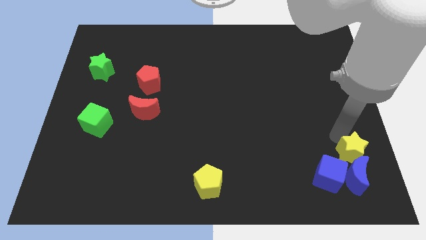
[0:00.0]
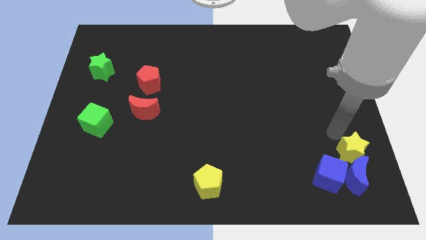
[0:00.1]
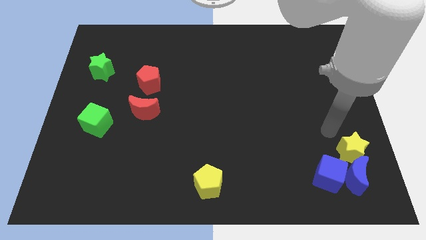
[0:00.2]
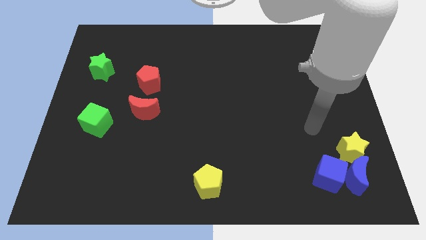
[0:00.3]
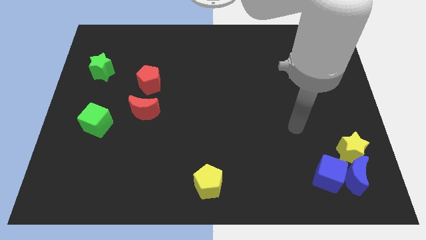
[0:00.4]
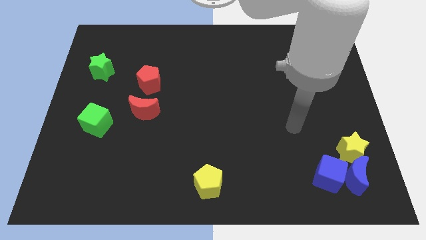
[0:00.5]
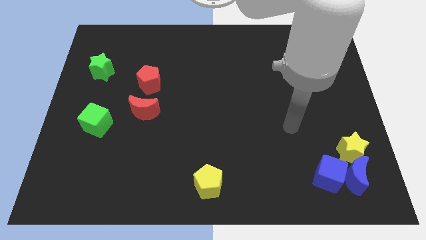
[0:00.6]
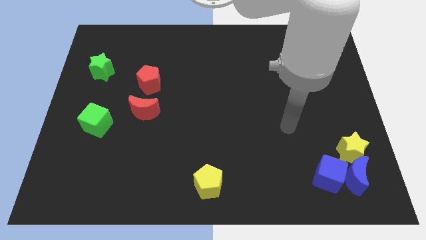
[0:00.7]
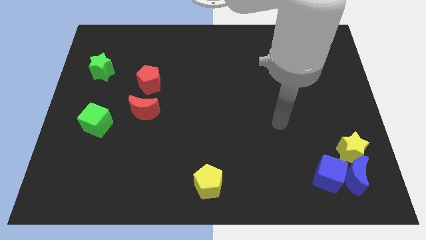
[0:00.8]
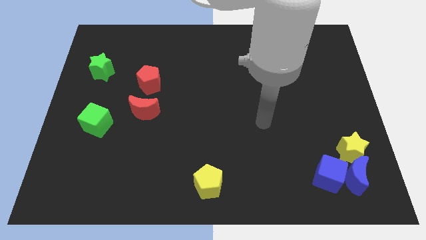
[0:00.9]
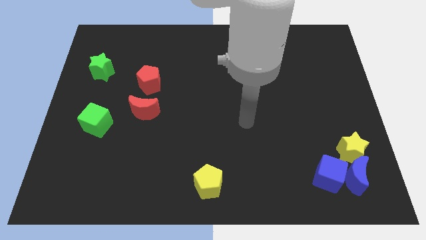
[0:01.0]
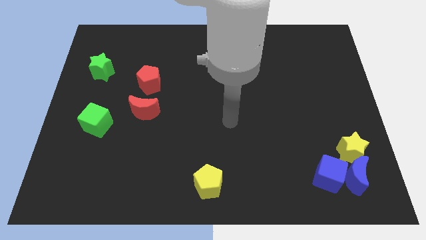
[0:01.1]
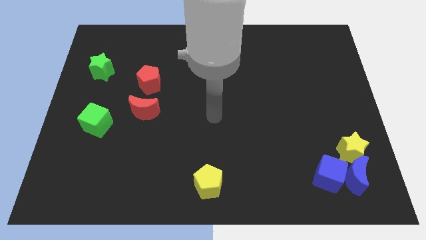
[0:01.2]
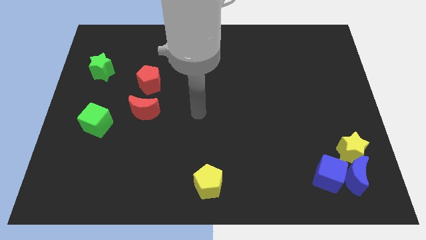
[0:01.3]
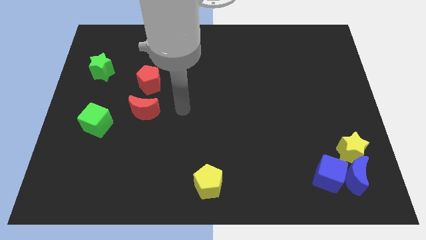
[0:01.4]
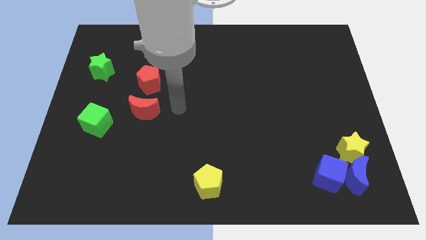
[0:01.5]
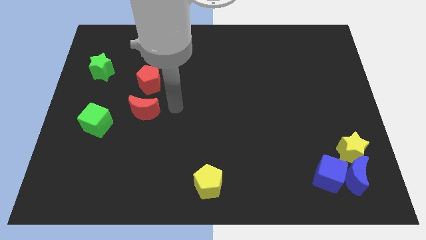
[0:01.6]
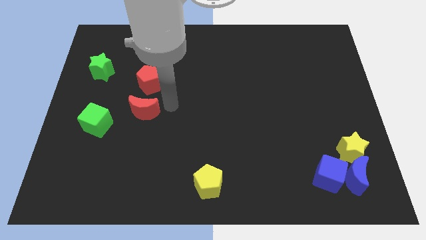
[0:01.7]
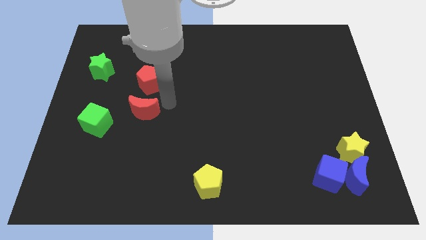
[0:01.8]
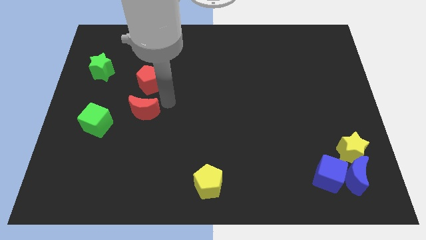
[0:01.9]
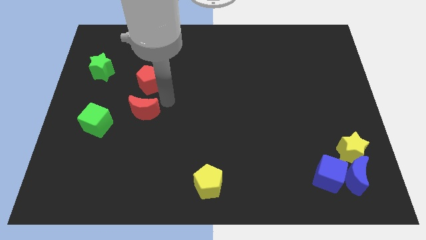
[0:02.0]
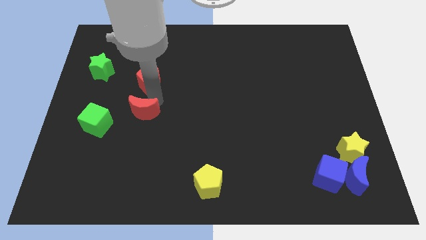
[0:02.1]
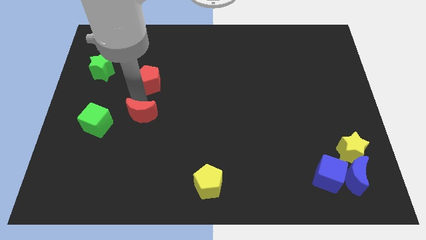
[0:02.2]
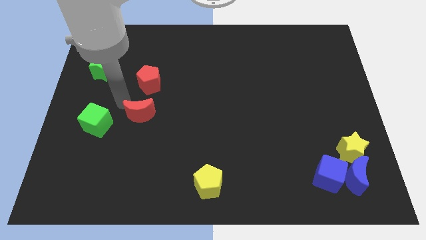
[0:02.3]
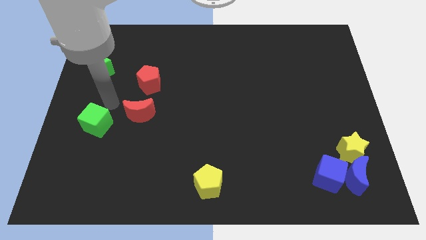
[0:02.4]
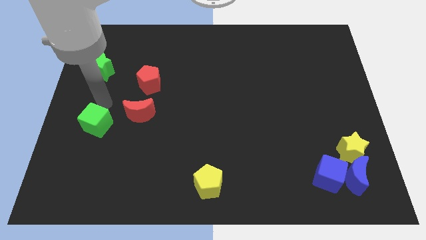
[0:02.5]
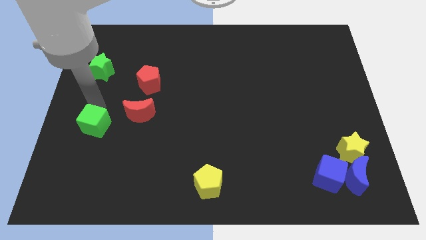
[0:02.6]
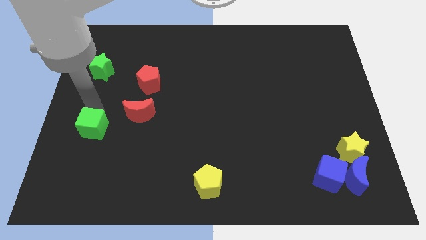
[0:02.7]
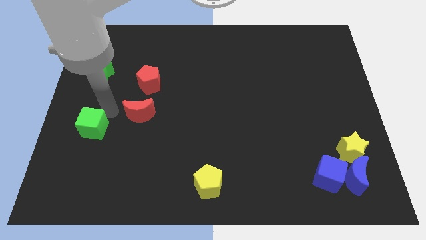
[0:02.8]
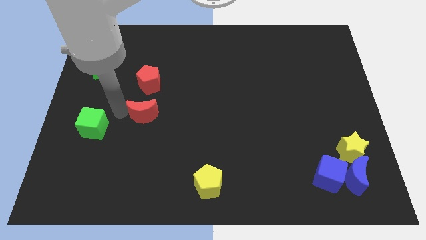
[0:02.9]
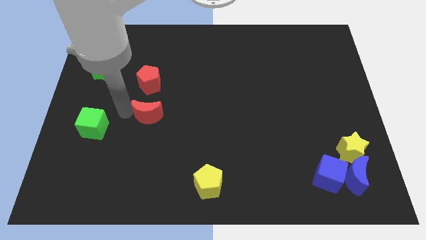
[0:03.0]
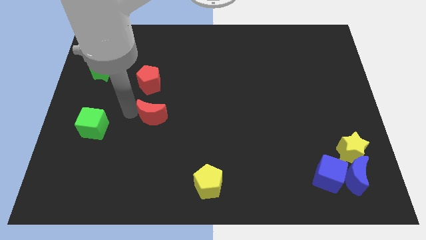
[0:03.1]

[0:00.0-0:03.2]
move your arm away form yellow star

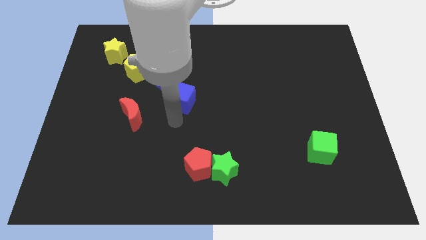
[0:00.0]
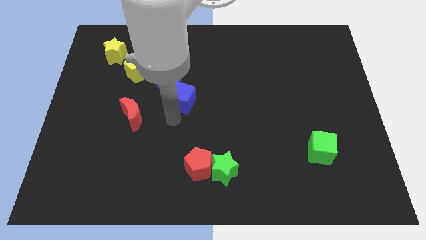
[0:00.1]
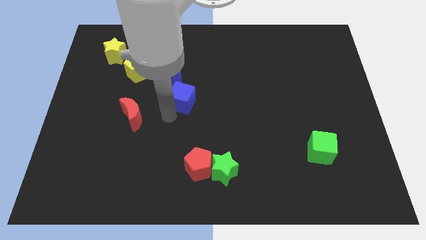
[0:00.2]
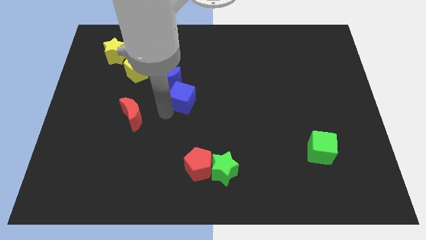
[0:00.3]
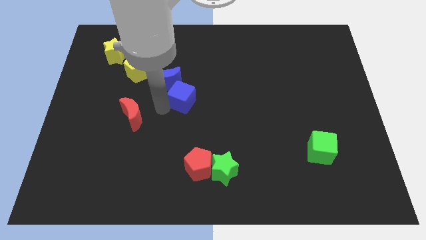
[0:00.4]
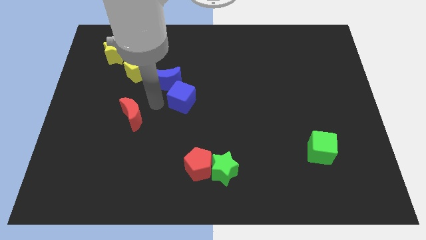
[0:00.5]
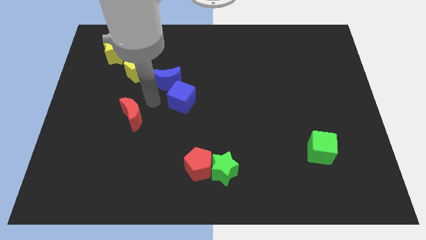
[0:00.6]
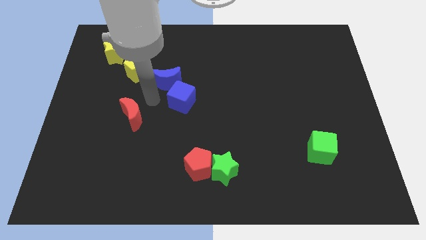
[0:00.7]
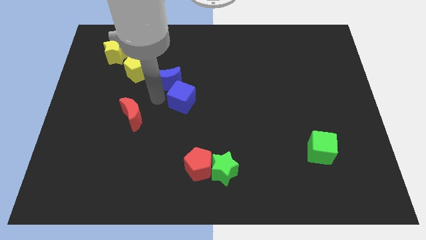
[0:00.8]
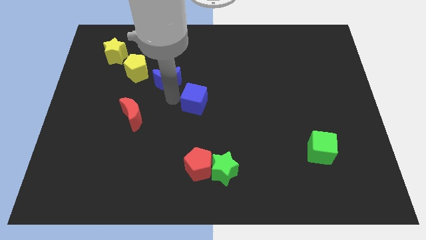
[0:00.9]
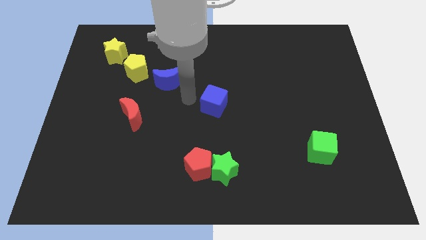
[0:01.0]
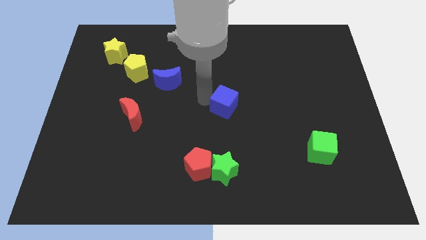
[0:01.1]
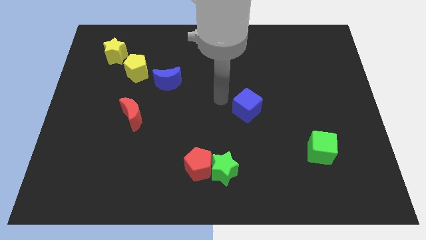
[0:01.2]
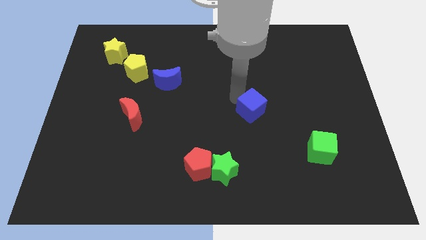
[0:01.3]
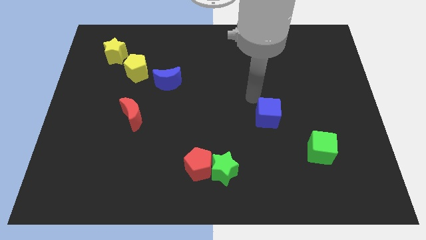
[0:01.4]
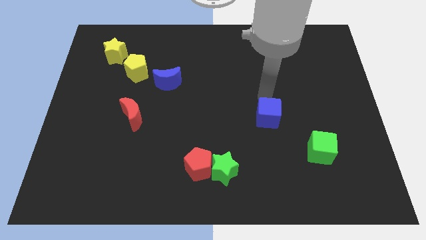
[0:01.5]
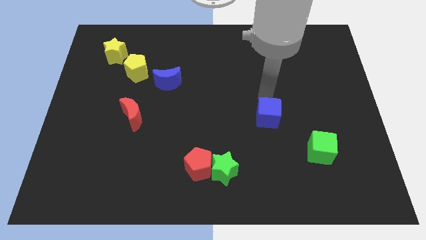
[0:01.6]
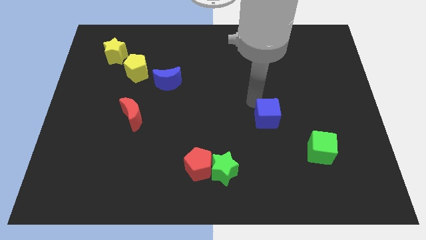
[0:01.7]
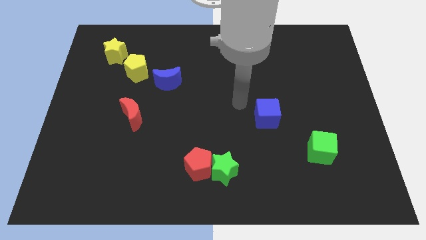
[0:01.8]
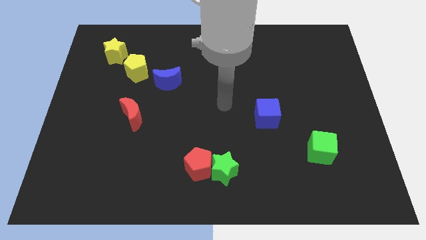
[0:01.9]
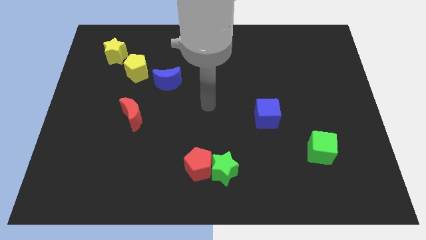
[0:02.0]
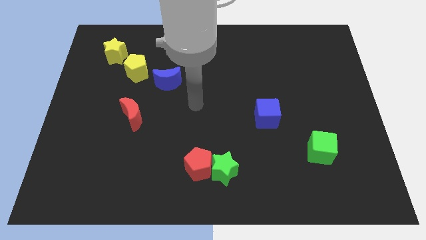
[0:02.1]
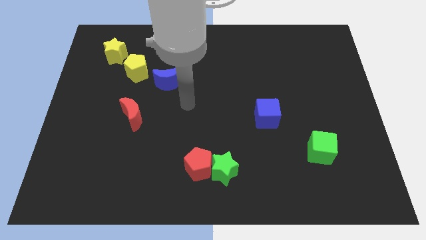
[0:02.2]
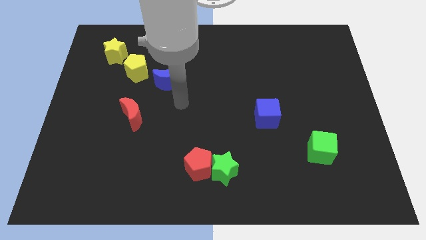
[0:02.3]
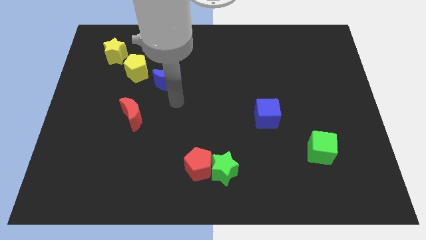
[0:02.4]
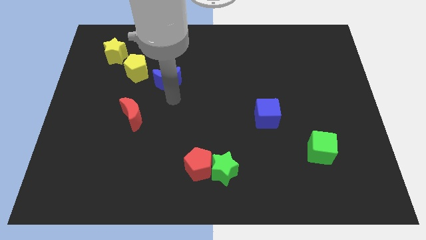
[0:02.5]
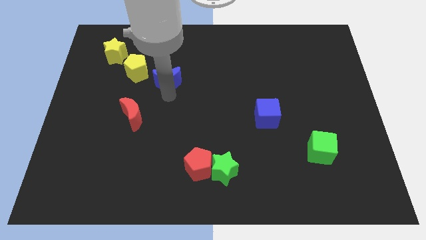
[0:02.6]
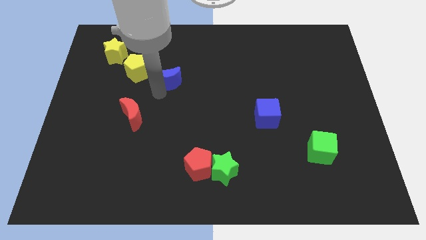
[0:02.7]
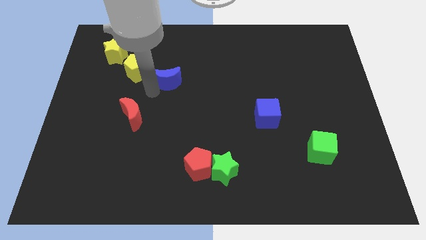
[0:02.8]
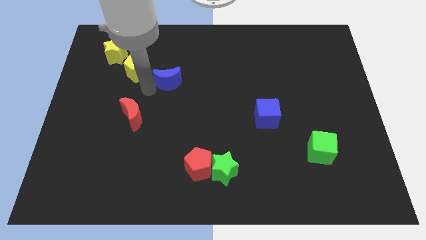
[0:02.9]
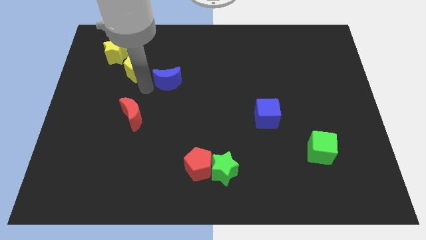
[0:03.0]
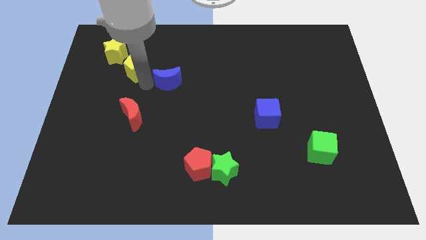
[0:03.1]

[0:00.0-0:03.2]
move the blue cube diagonally to the top right of the yellow pentagon

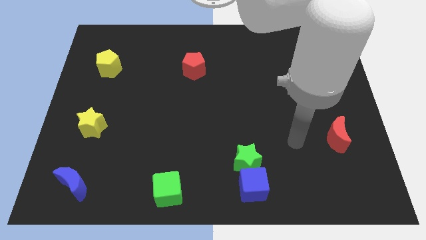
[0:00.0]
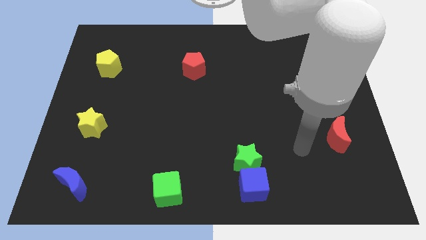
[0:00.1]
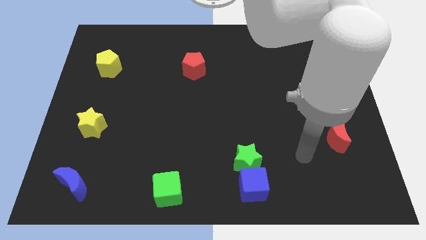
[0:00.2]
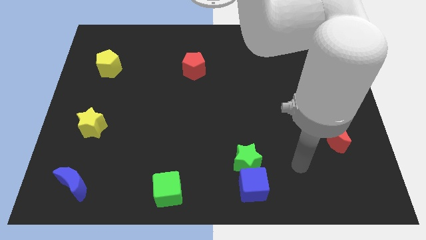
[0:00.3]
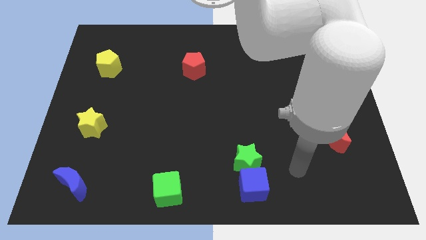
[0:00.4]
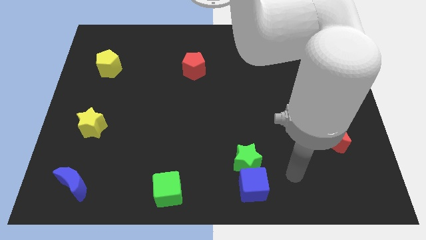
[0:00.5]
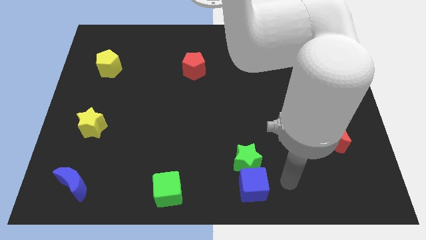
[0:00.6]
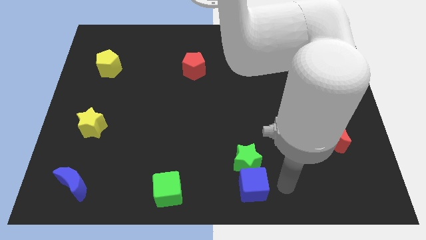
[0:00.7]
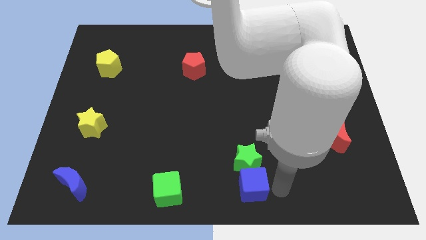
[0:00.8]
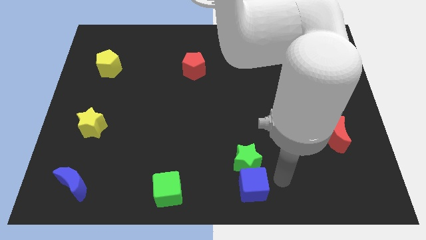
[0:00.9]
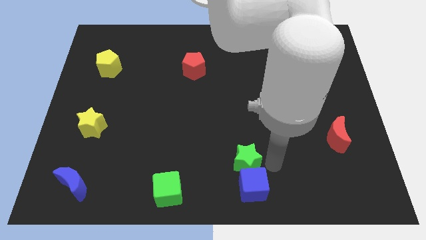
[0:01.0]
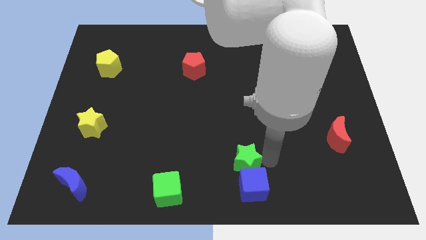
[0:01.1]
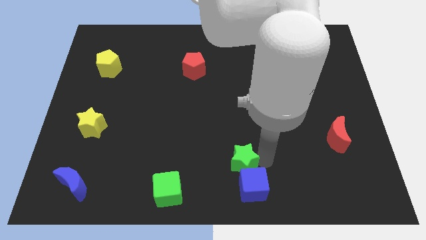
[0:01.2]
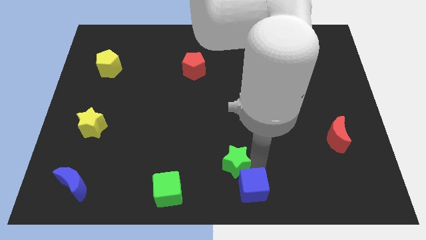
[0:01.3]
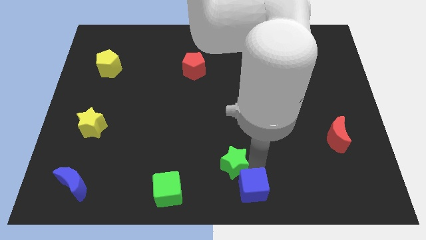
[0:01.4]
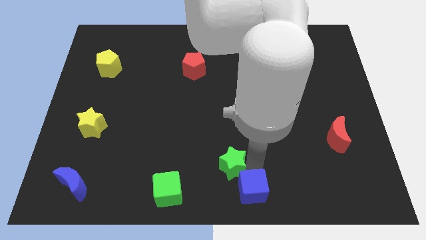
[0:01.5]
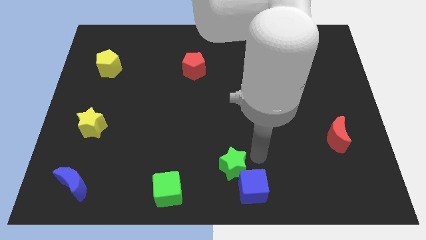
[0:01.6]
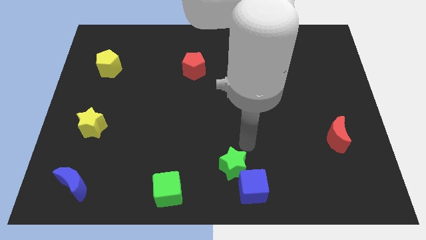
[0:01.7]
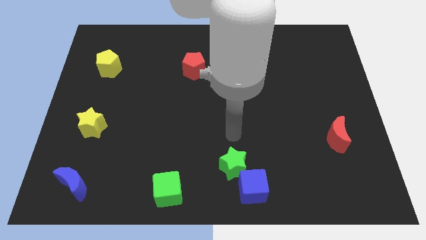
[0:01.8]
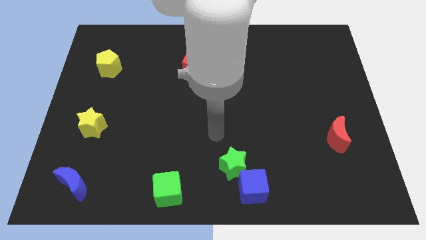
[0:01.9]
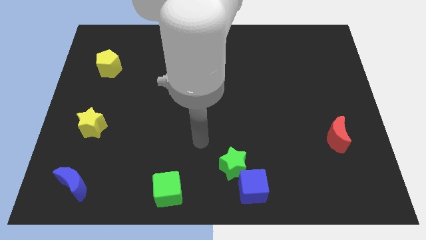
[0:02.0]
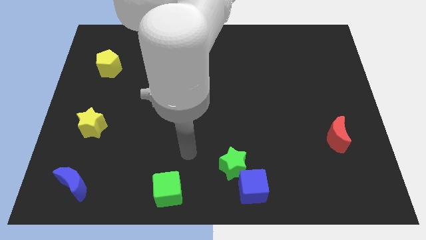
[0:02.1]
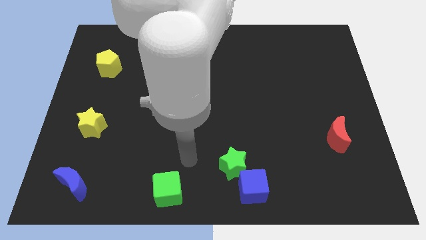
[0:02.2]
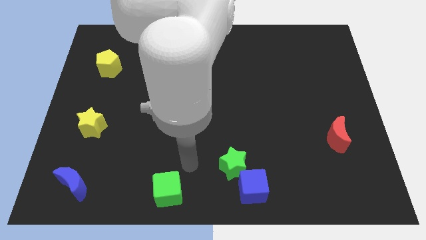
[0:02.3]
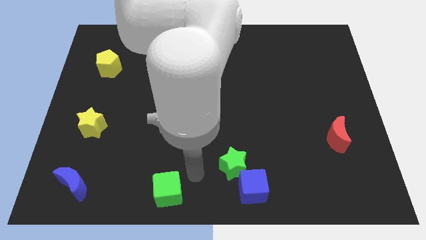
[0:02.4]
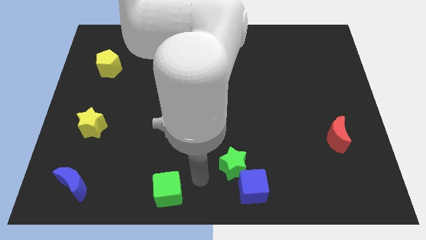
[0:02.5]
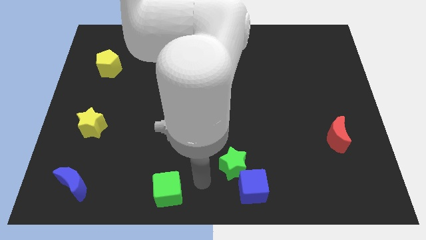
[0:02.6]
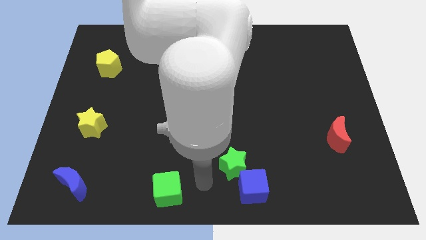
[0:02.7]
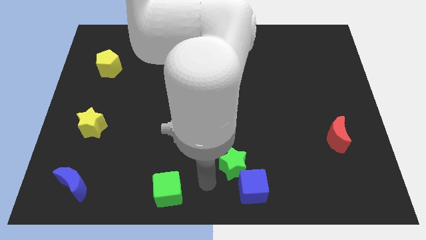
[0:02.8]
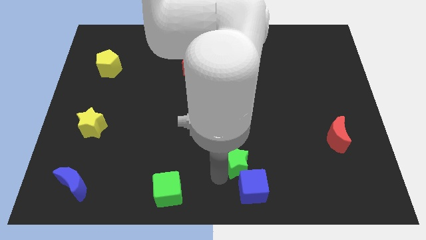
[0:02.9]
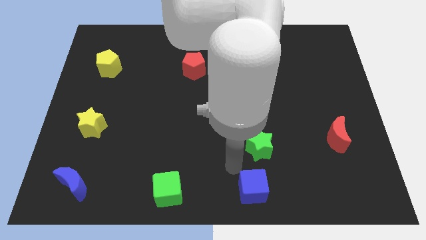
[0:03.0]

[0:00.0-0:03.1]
move green star to the left of red moon
